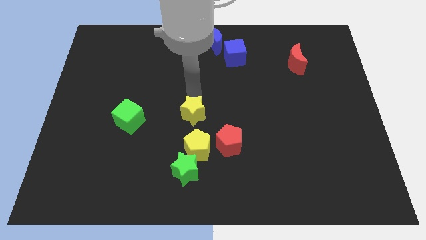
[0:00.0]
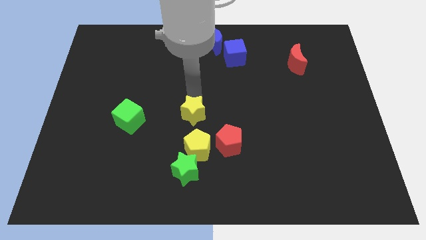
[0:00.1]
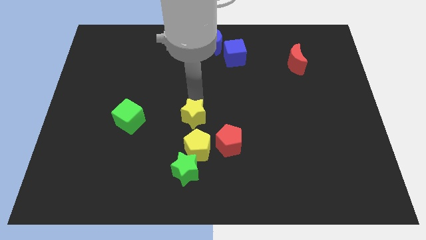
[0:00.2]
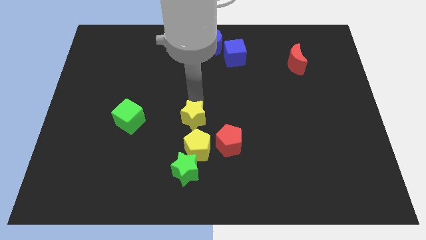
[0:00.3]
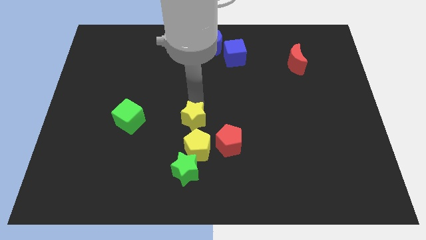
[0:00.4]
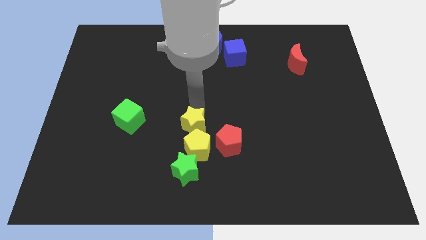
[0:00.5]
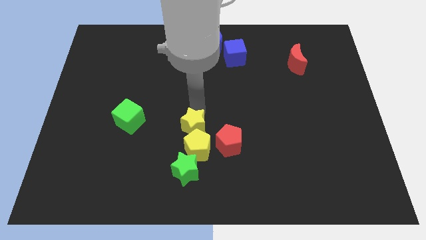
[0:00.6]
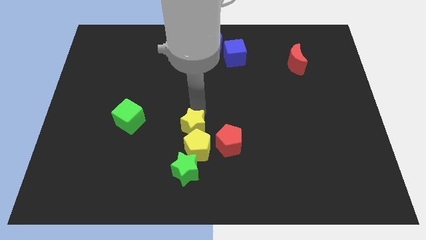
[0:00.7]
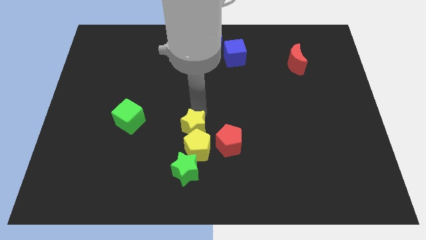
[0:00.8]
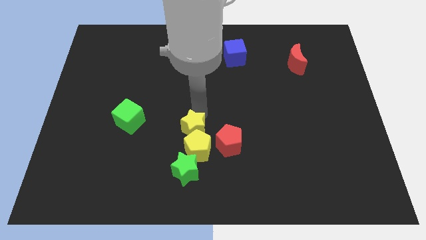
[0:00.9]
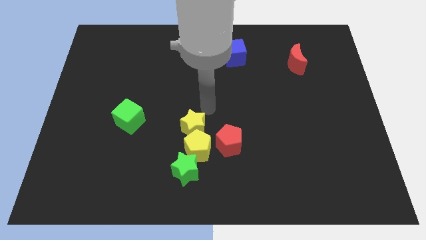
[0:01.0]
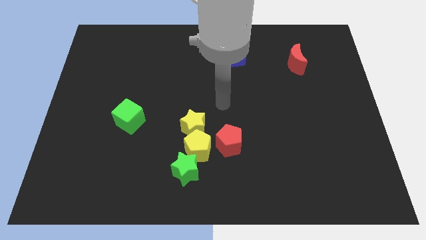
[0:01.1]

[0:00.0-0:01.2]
push the yellow star into the yellow pentagon

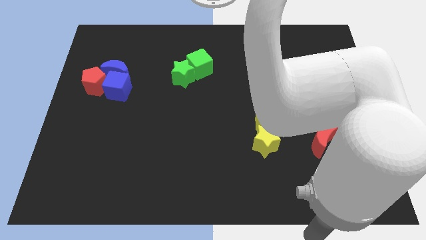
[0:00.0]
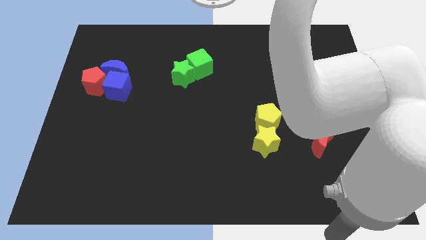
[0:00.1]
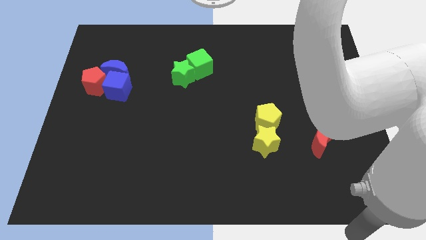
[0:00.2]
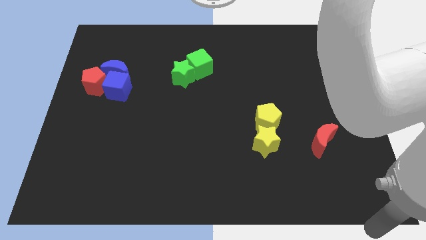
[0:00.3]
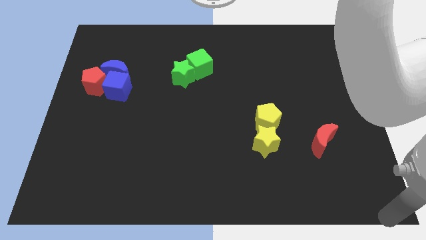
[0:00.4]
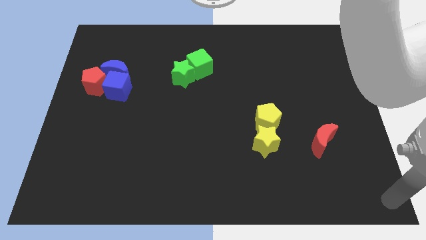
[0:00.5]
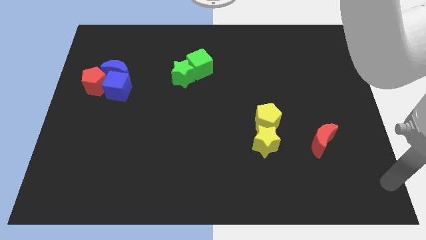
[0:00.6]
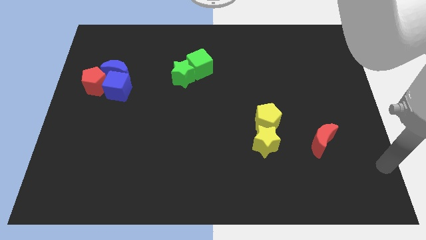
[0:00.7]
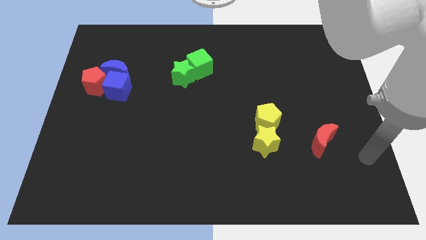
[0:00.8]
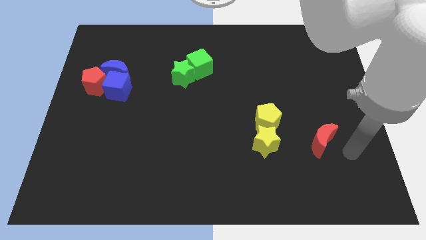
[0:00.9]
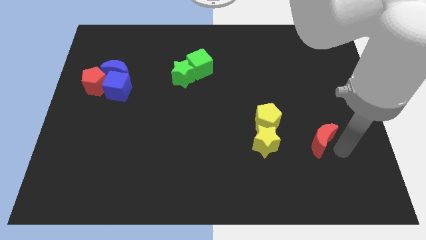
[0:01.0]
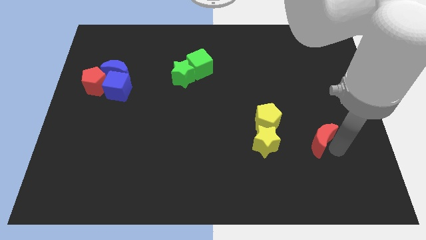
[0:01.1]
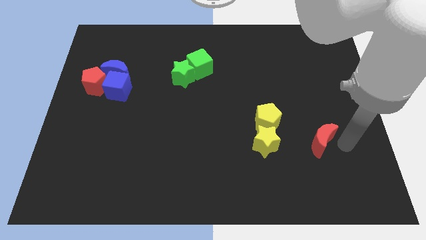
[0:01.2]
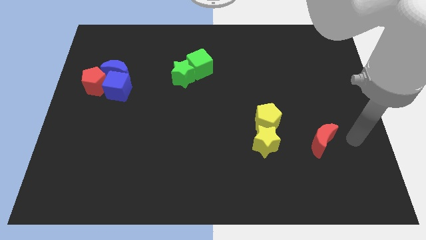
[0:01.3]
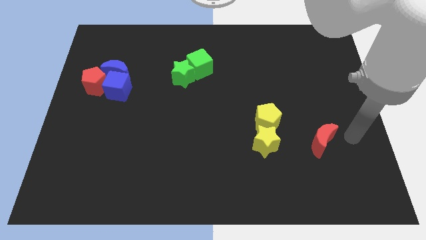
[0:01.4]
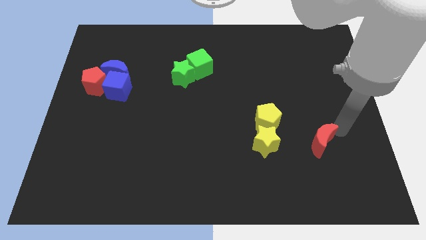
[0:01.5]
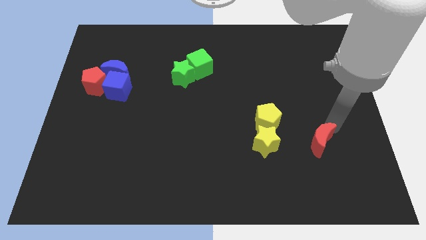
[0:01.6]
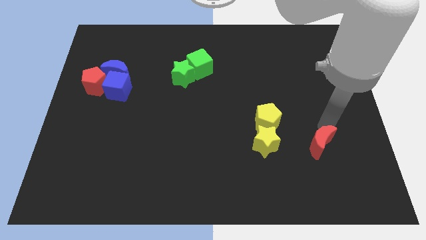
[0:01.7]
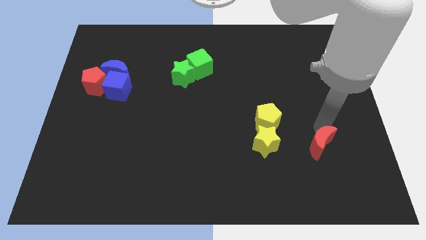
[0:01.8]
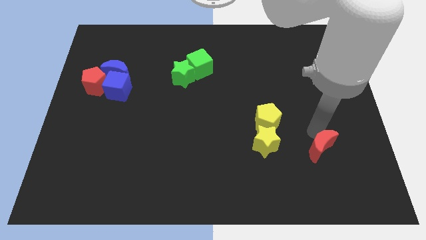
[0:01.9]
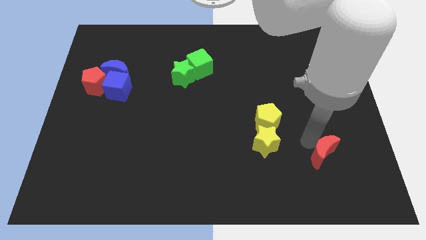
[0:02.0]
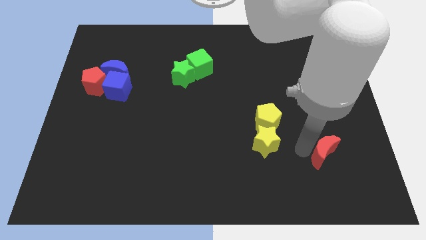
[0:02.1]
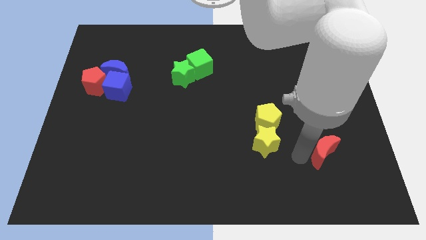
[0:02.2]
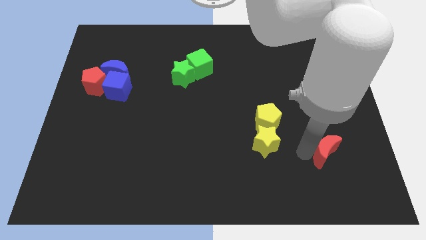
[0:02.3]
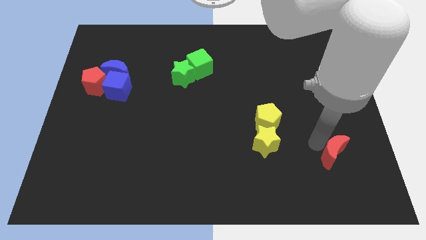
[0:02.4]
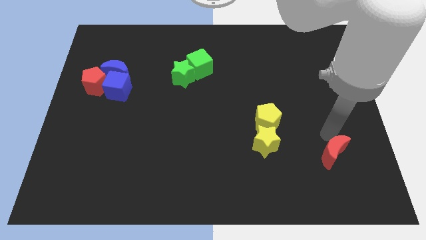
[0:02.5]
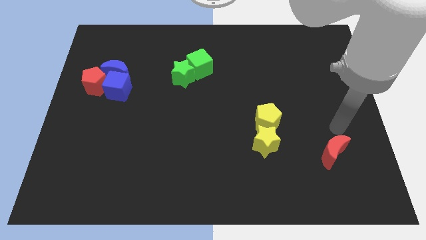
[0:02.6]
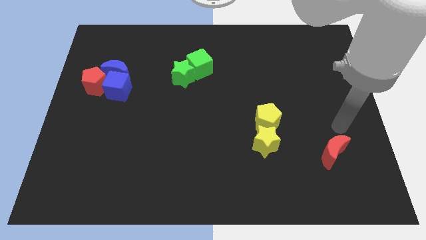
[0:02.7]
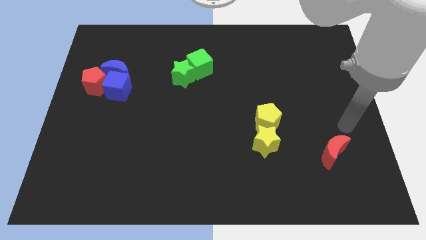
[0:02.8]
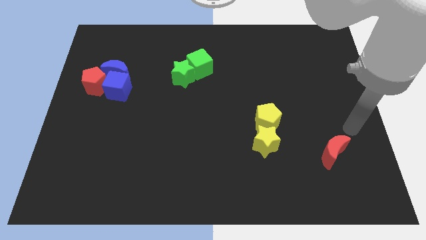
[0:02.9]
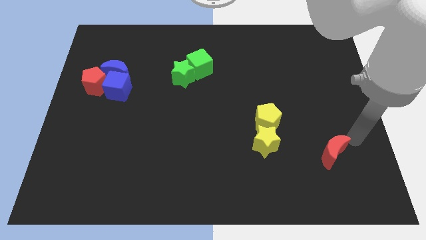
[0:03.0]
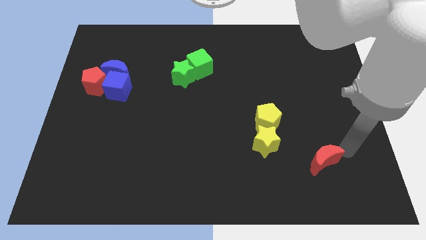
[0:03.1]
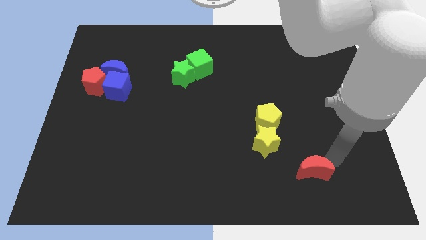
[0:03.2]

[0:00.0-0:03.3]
slide the red moon diagonally on the bottom right side of the yellow star

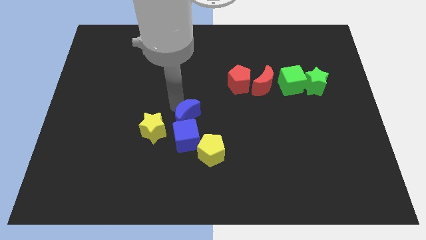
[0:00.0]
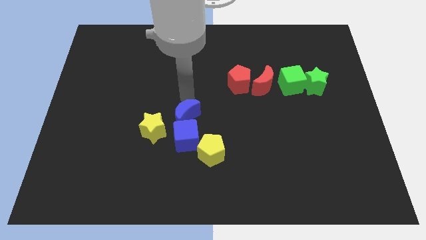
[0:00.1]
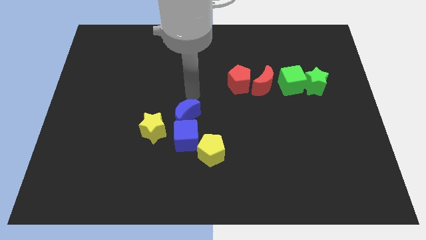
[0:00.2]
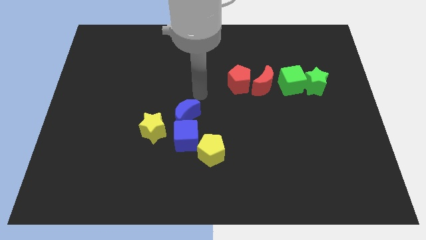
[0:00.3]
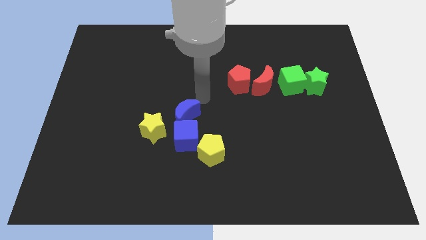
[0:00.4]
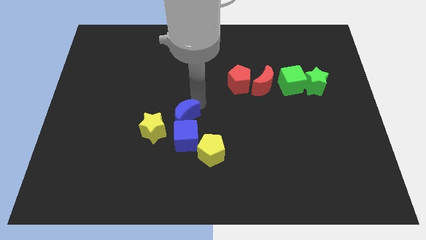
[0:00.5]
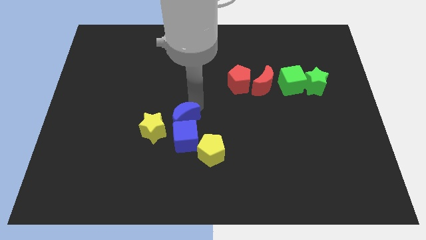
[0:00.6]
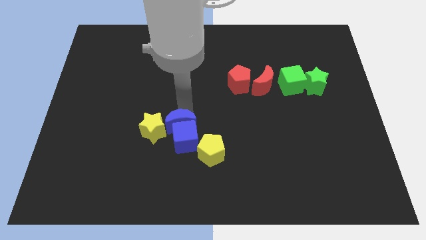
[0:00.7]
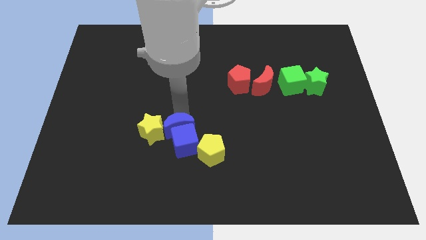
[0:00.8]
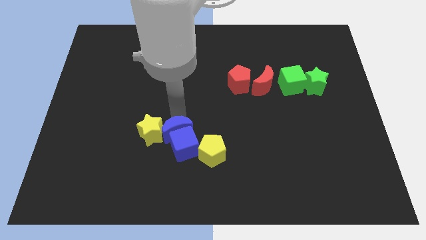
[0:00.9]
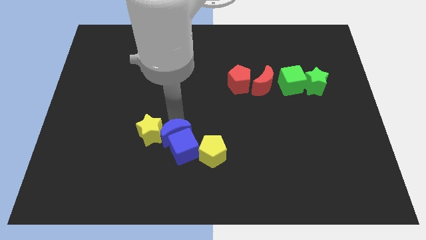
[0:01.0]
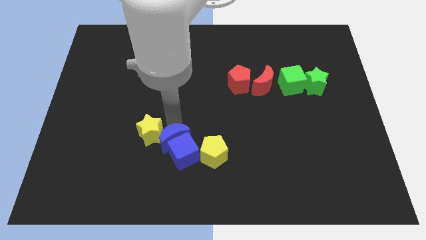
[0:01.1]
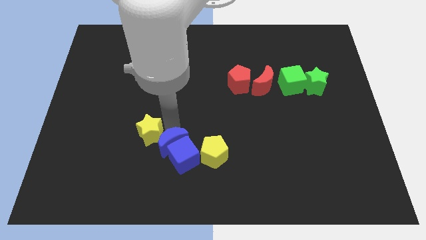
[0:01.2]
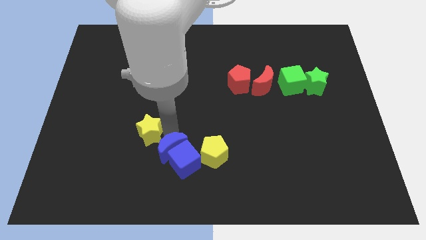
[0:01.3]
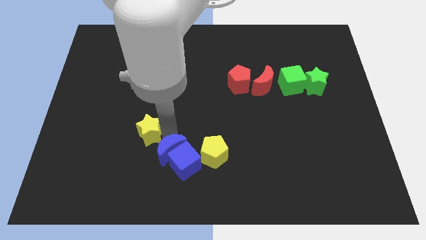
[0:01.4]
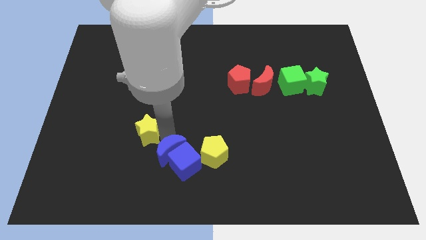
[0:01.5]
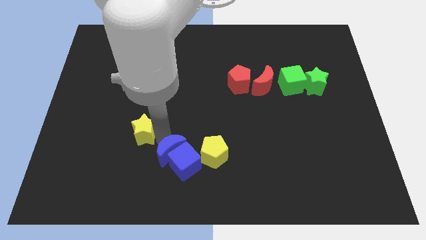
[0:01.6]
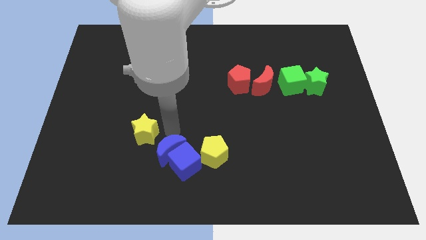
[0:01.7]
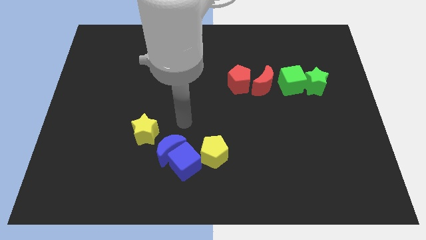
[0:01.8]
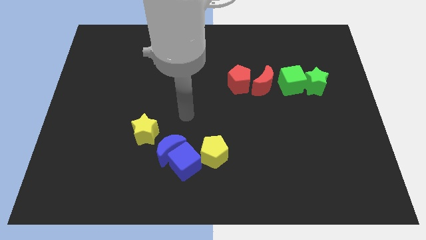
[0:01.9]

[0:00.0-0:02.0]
move blue crescent along with blue cube towards the bottom center of the board

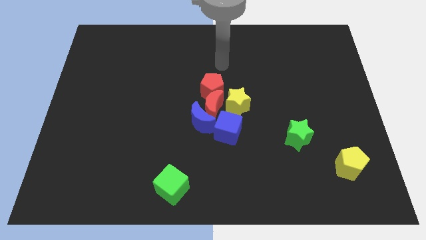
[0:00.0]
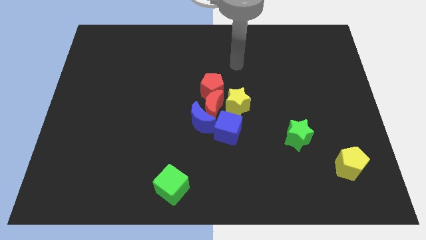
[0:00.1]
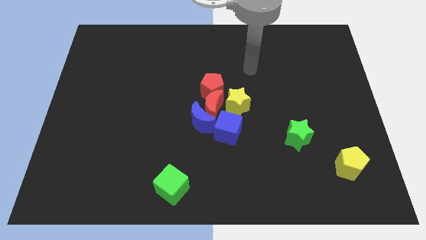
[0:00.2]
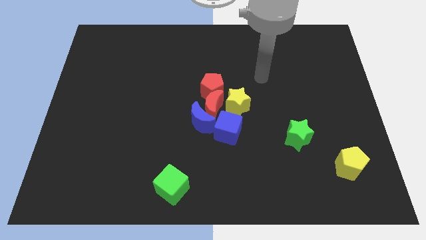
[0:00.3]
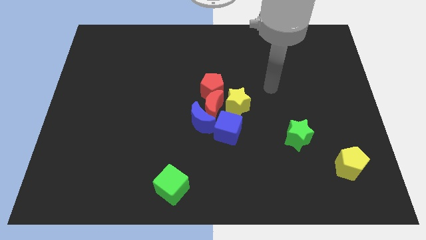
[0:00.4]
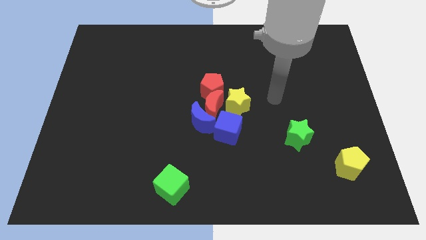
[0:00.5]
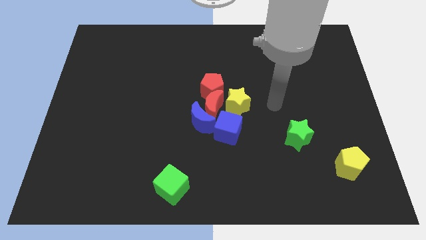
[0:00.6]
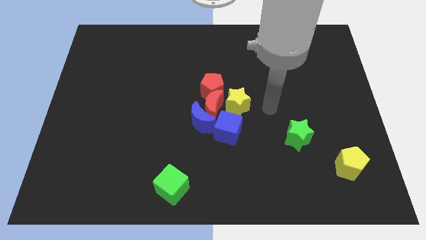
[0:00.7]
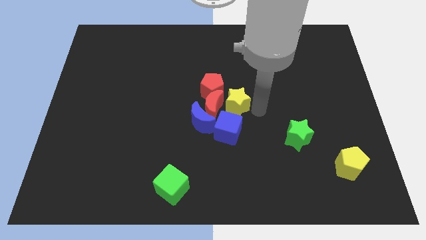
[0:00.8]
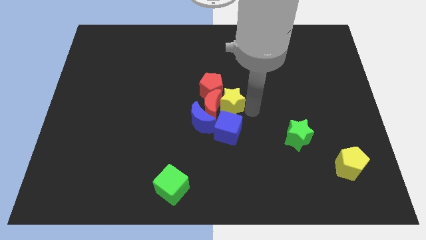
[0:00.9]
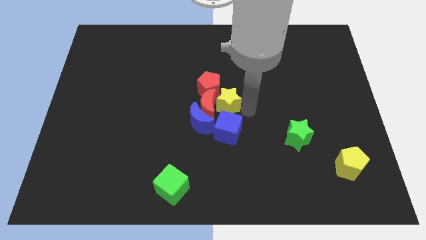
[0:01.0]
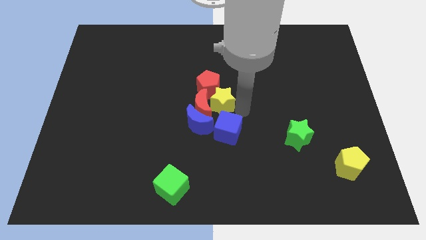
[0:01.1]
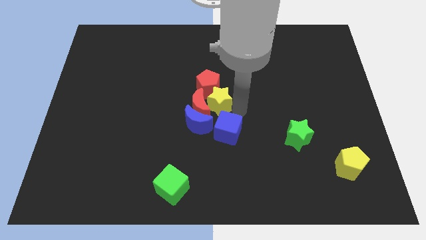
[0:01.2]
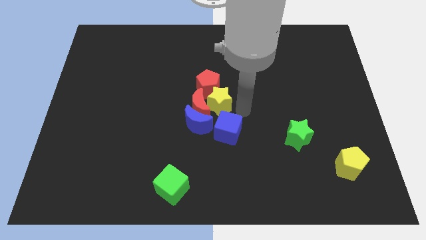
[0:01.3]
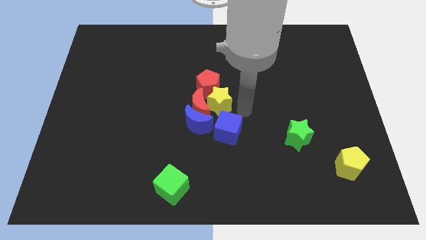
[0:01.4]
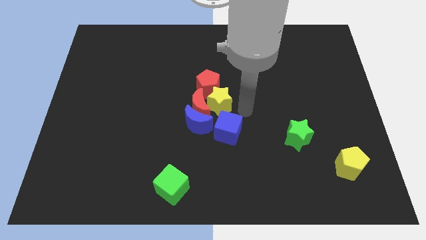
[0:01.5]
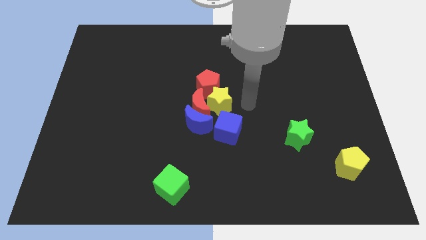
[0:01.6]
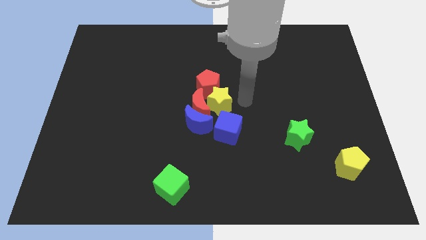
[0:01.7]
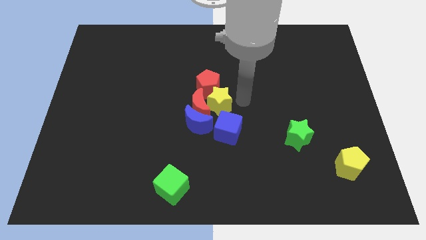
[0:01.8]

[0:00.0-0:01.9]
push yellow star into red moon

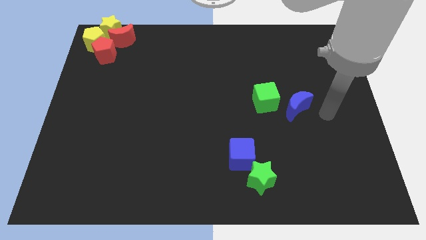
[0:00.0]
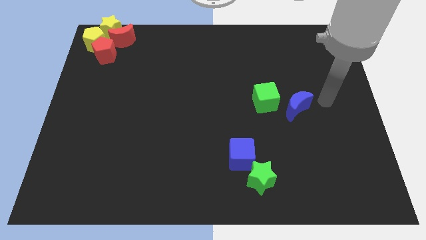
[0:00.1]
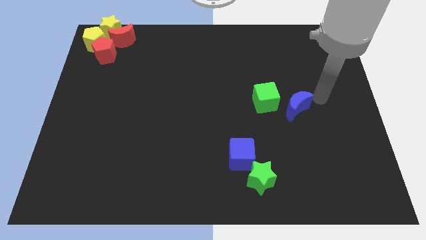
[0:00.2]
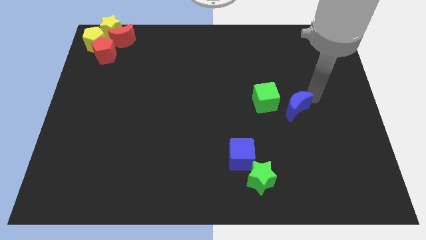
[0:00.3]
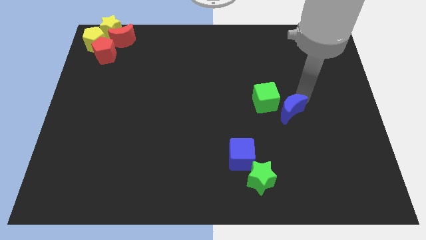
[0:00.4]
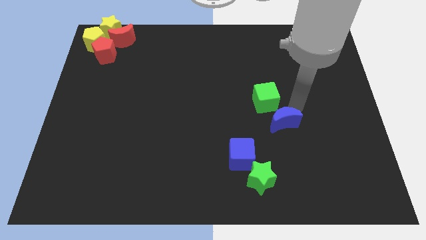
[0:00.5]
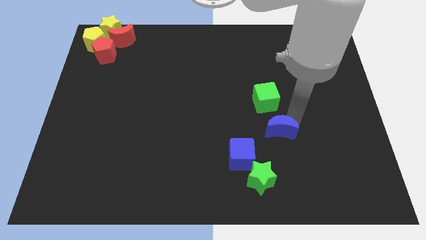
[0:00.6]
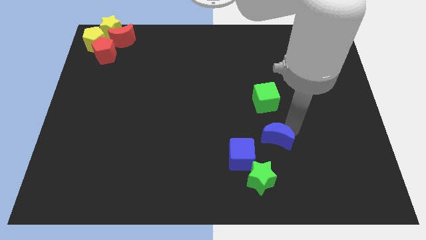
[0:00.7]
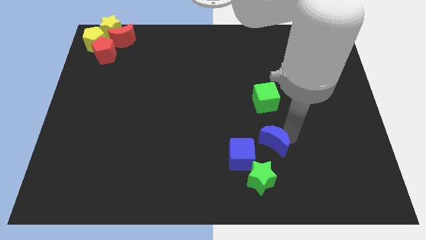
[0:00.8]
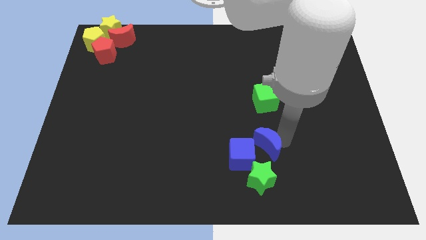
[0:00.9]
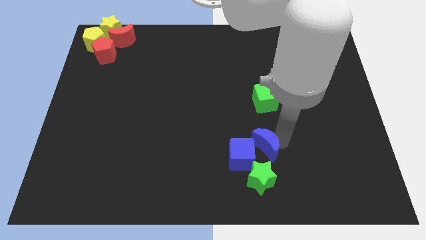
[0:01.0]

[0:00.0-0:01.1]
place the blue moon in between the green cube and green star
